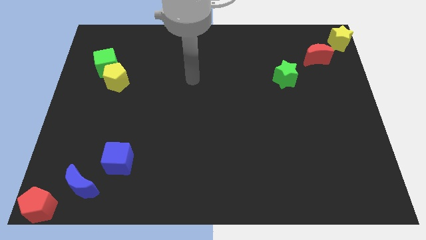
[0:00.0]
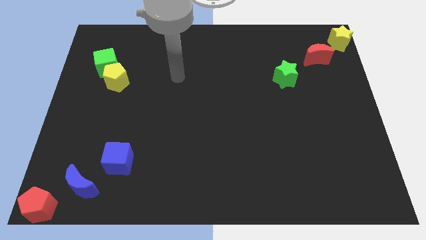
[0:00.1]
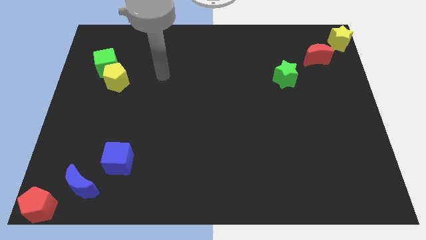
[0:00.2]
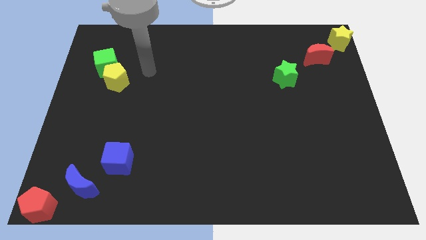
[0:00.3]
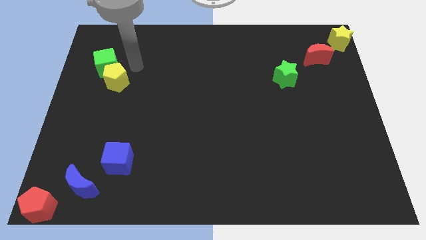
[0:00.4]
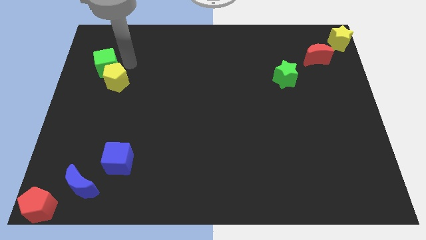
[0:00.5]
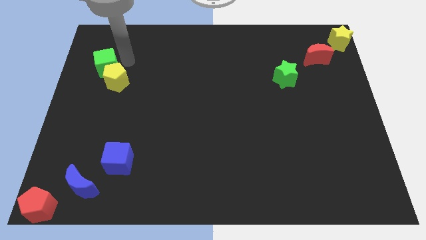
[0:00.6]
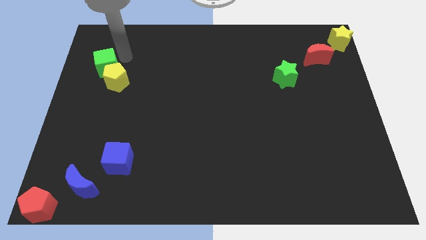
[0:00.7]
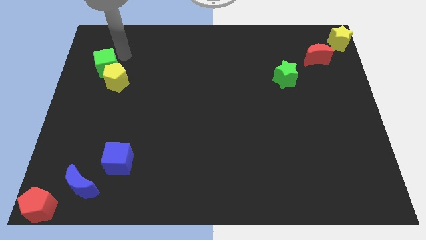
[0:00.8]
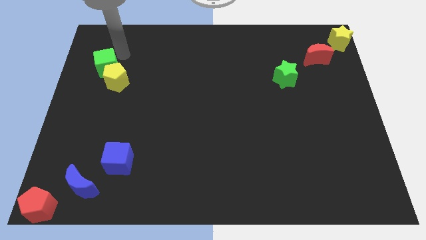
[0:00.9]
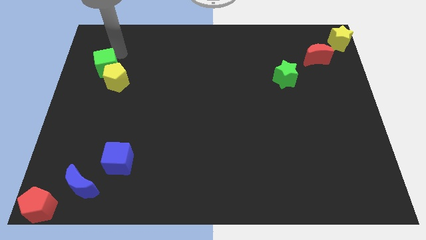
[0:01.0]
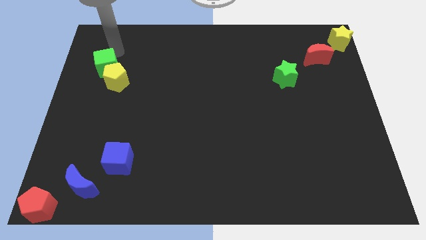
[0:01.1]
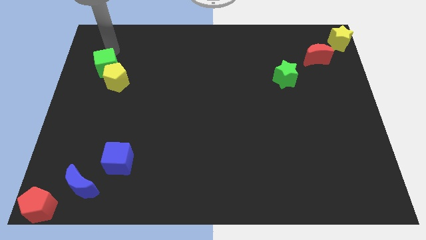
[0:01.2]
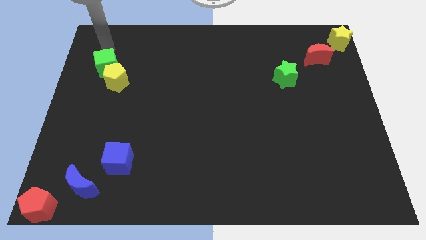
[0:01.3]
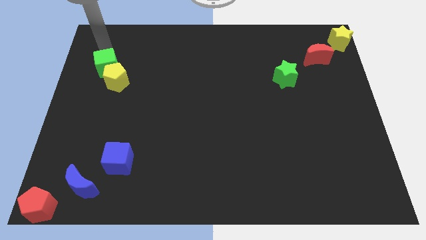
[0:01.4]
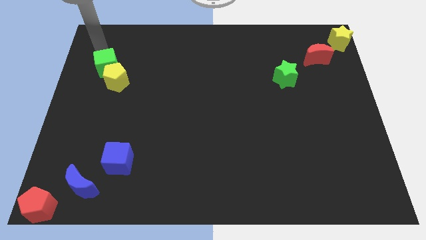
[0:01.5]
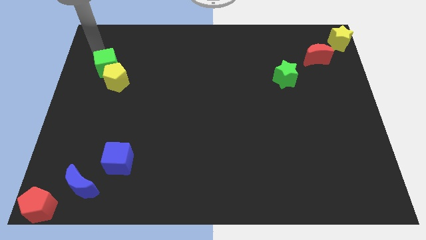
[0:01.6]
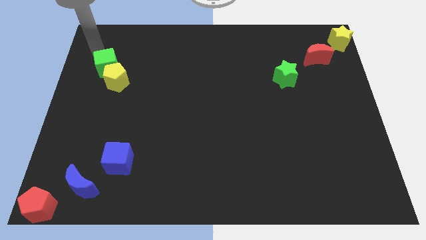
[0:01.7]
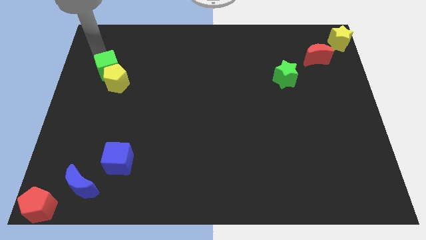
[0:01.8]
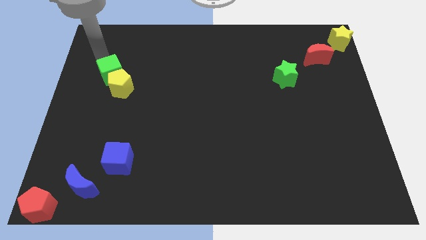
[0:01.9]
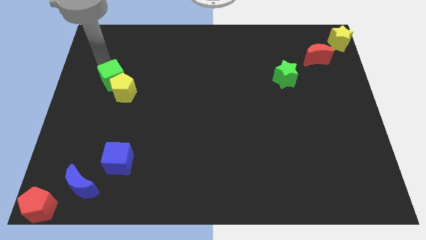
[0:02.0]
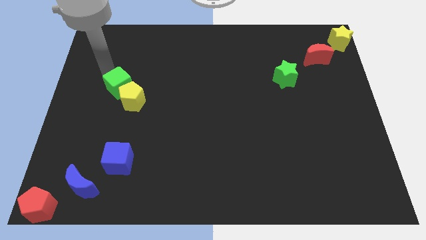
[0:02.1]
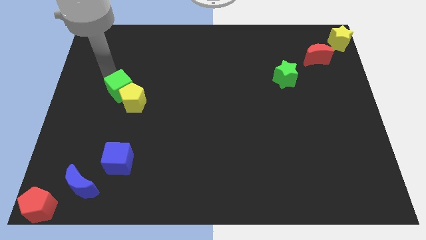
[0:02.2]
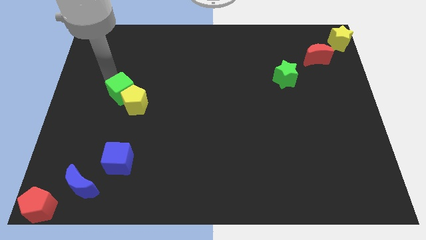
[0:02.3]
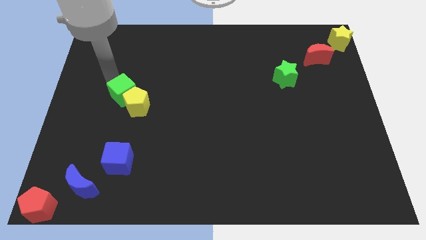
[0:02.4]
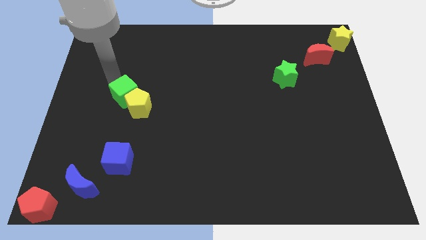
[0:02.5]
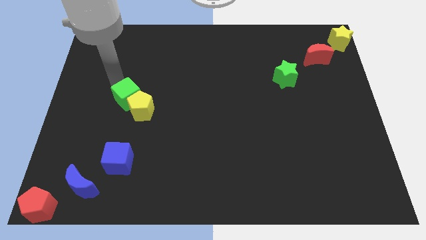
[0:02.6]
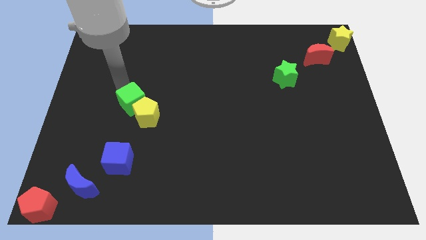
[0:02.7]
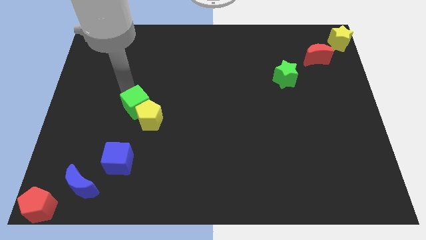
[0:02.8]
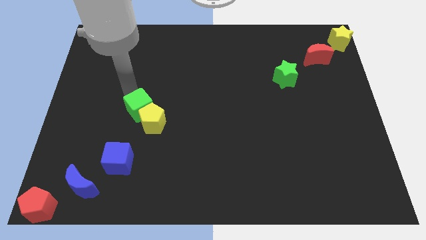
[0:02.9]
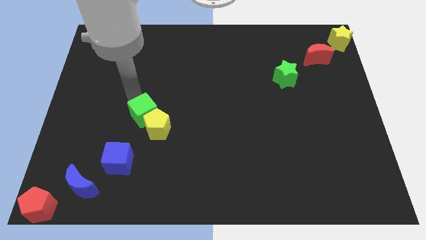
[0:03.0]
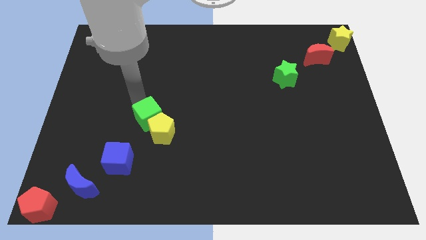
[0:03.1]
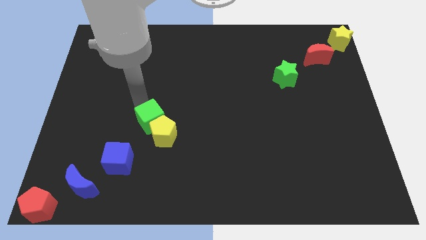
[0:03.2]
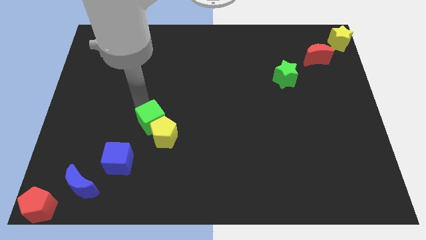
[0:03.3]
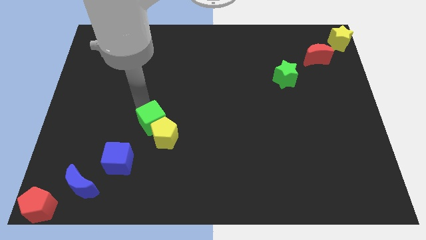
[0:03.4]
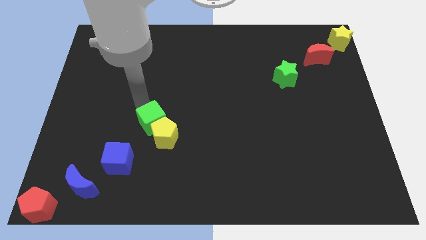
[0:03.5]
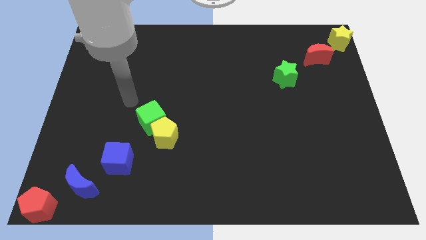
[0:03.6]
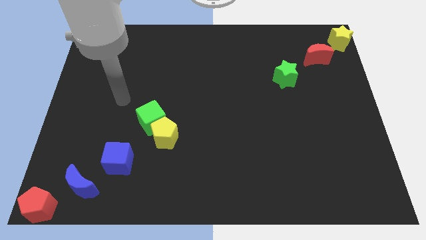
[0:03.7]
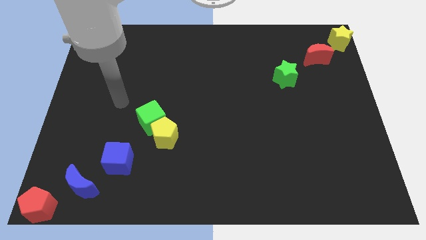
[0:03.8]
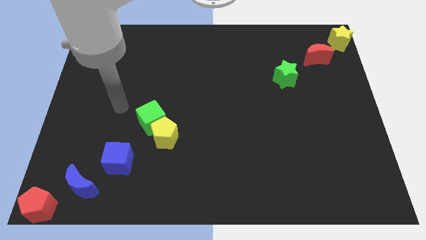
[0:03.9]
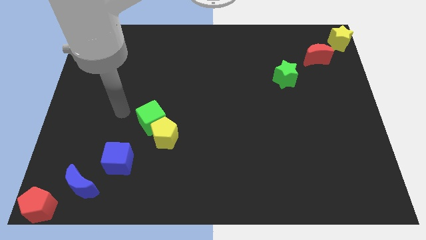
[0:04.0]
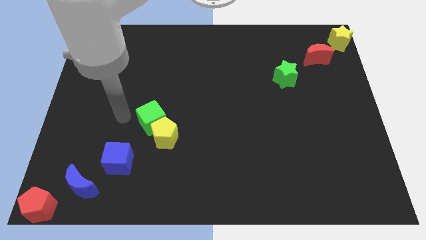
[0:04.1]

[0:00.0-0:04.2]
move green cube and yellow pentagon diagonally above the blue cube

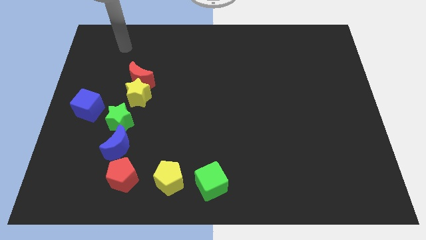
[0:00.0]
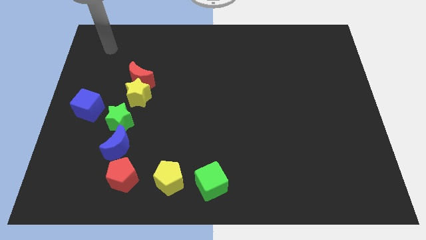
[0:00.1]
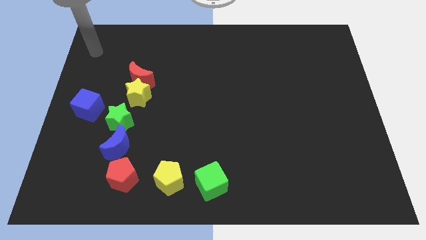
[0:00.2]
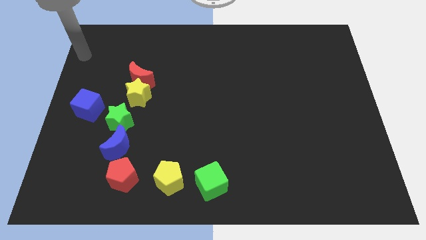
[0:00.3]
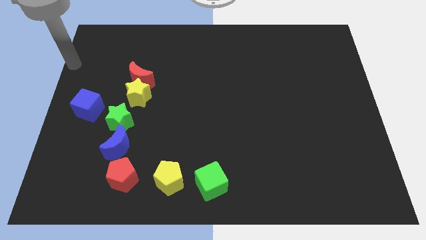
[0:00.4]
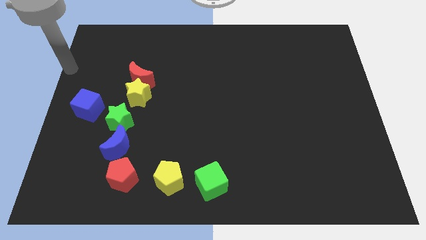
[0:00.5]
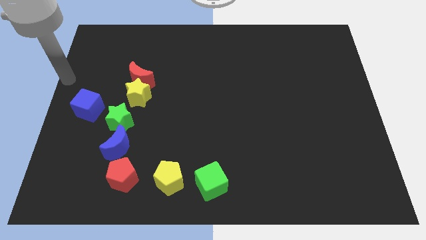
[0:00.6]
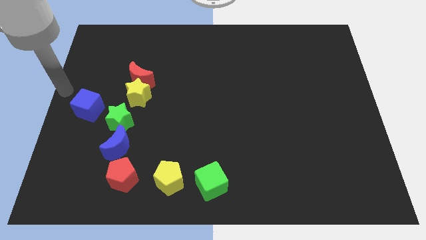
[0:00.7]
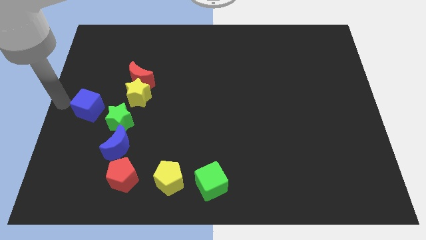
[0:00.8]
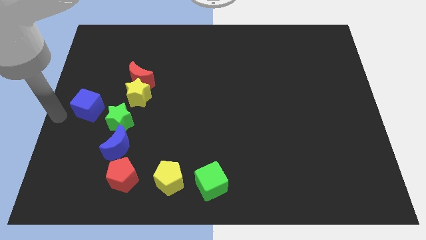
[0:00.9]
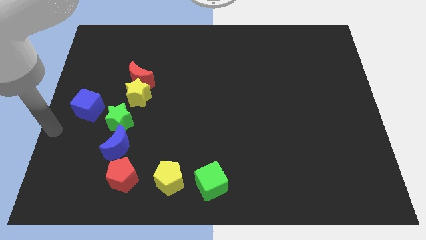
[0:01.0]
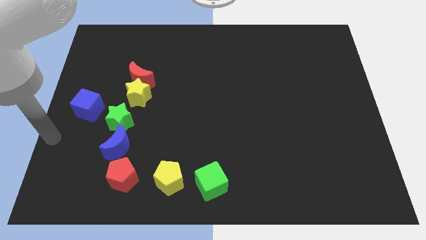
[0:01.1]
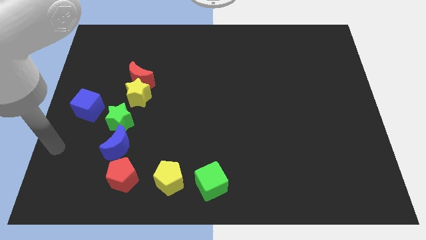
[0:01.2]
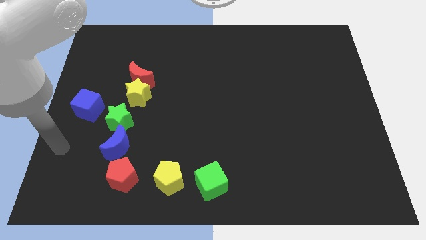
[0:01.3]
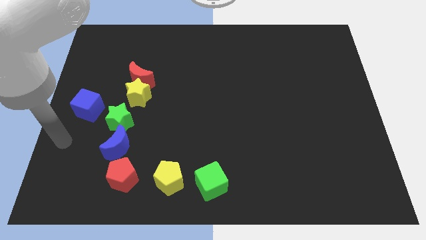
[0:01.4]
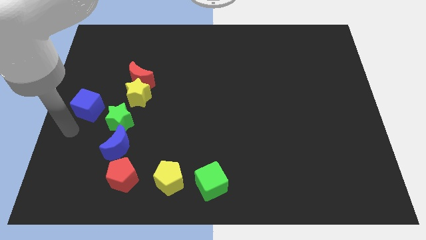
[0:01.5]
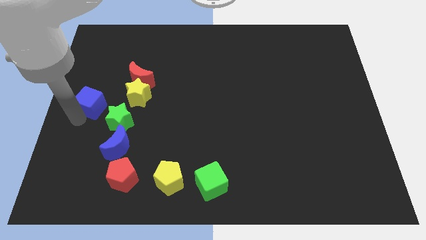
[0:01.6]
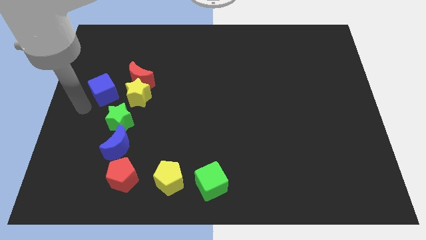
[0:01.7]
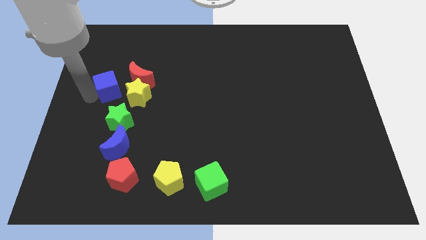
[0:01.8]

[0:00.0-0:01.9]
push the blue cube parallel left to the yellow star

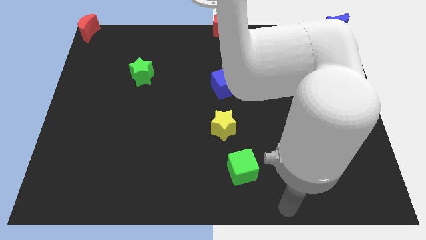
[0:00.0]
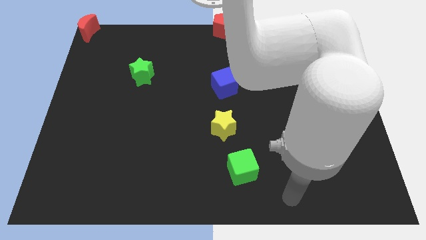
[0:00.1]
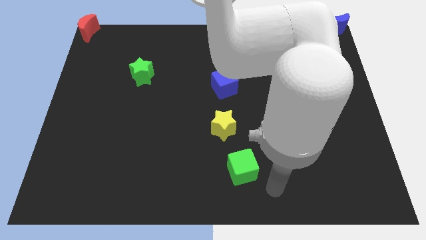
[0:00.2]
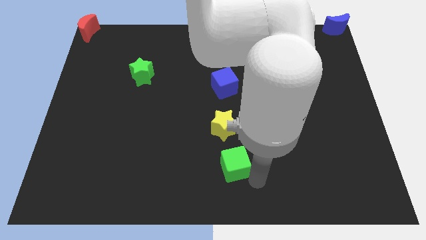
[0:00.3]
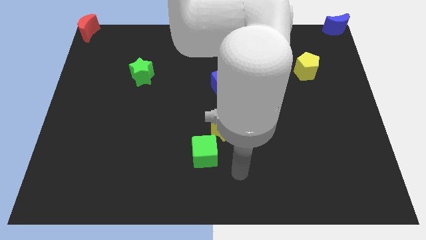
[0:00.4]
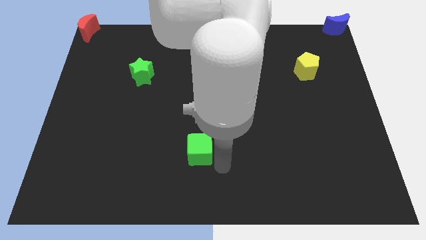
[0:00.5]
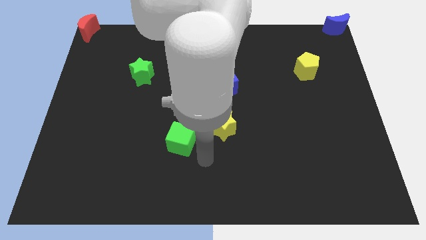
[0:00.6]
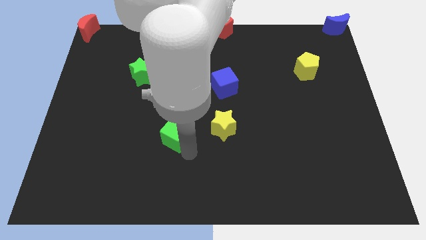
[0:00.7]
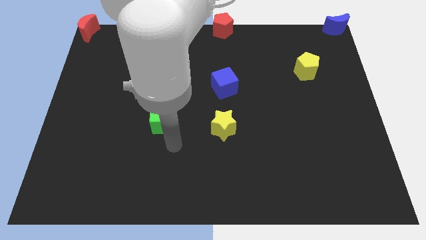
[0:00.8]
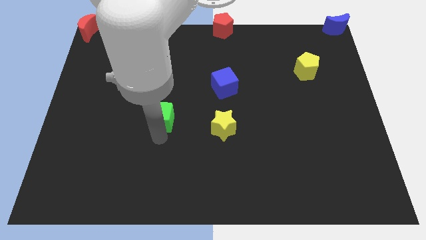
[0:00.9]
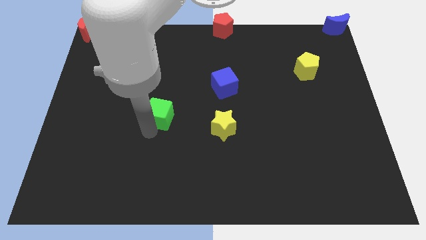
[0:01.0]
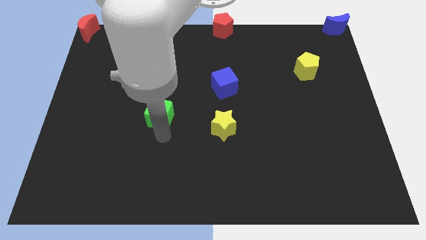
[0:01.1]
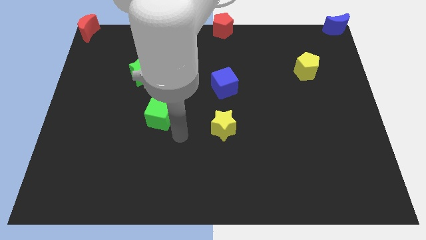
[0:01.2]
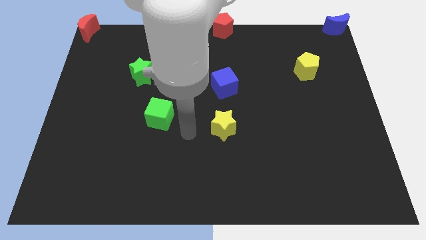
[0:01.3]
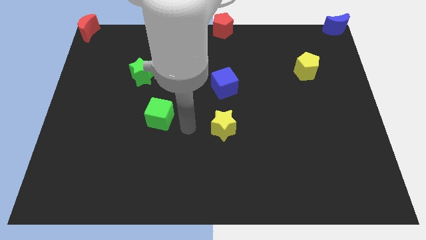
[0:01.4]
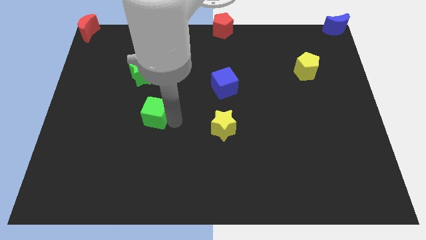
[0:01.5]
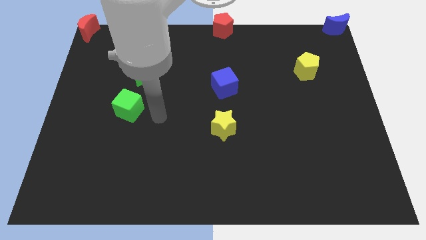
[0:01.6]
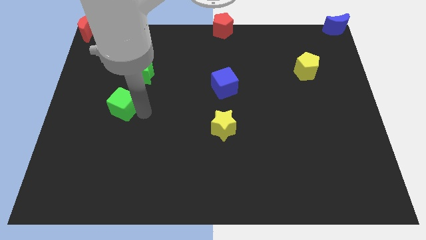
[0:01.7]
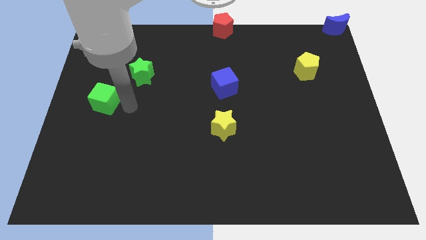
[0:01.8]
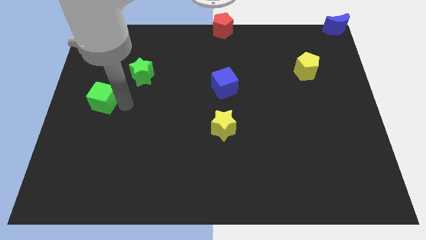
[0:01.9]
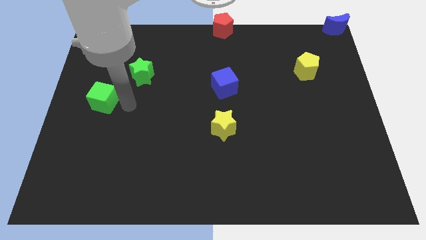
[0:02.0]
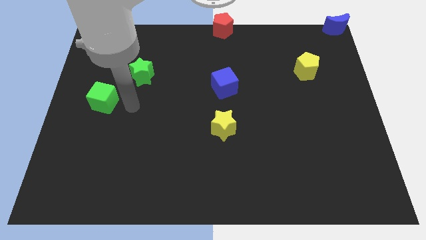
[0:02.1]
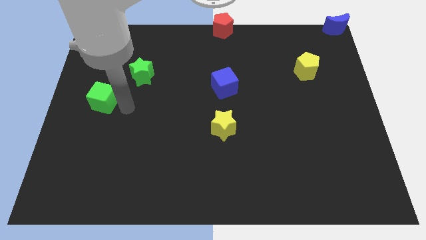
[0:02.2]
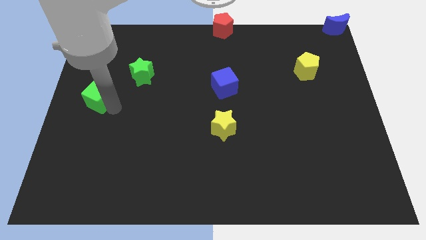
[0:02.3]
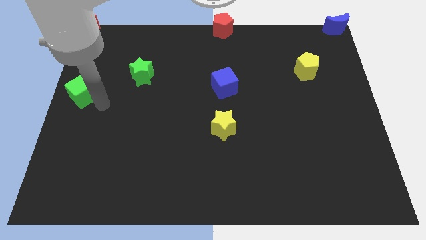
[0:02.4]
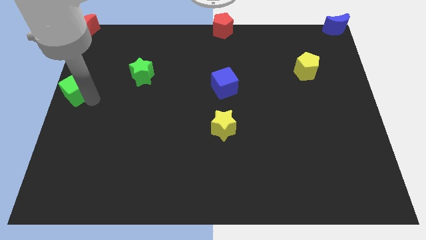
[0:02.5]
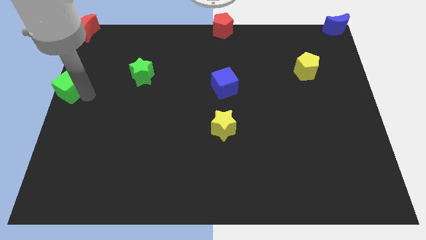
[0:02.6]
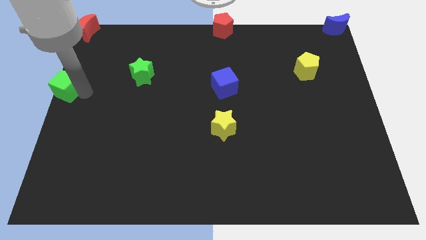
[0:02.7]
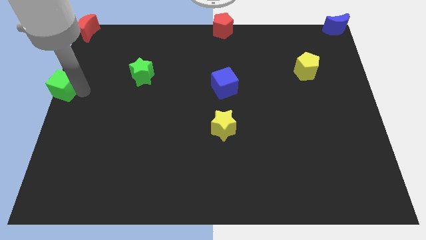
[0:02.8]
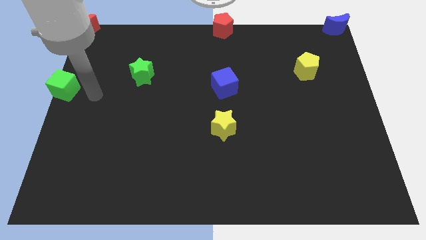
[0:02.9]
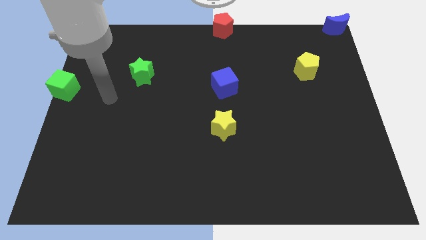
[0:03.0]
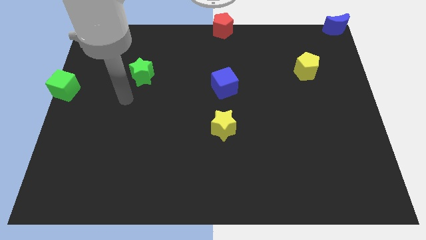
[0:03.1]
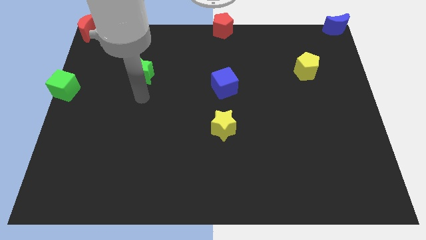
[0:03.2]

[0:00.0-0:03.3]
place the green cube parallel to blue cube
